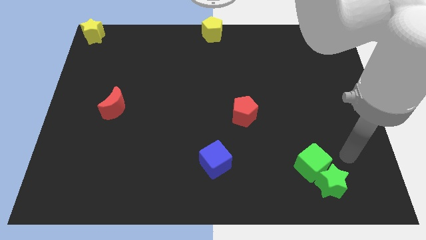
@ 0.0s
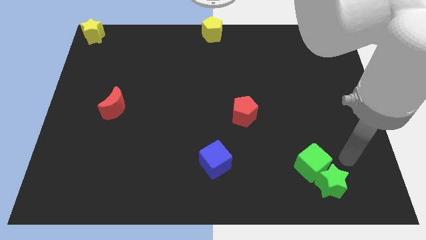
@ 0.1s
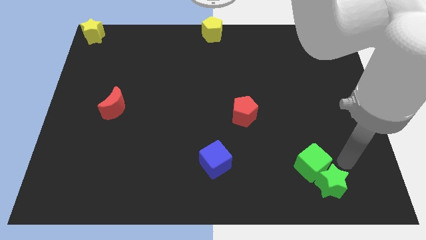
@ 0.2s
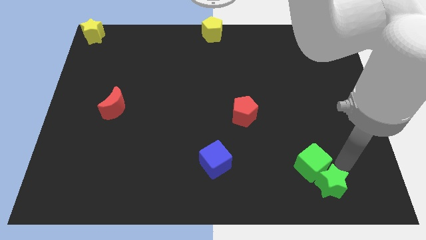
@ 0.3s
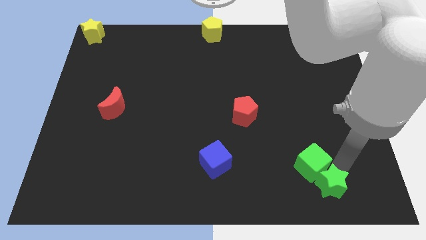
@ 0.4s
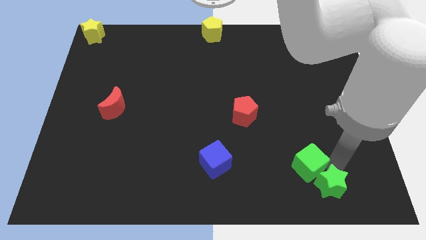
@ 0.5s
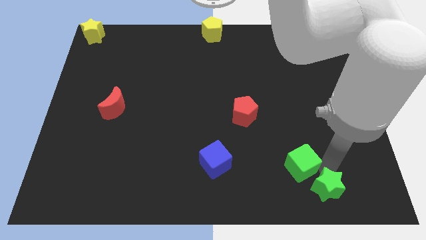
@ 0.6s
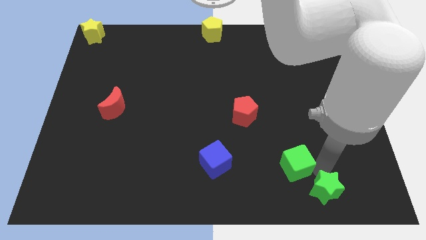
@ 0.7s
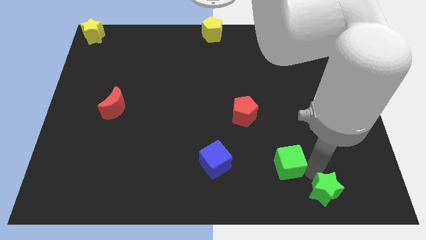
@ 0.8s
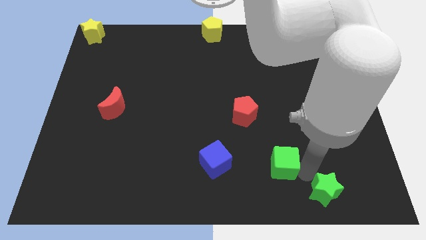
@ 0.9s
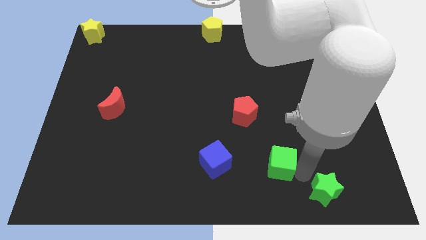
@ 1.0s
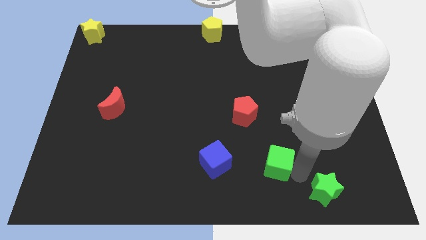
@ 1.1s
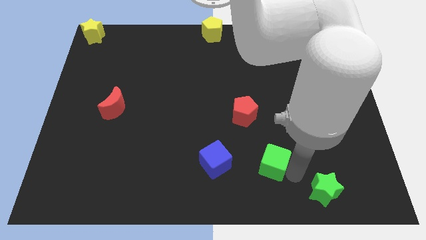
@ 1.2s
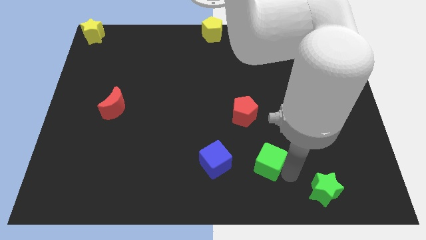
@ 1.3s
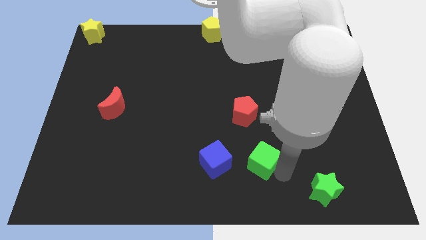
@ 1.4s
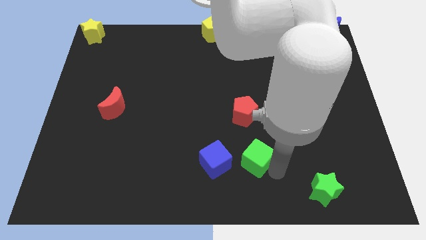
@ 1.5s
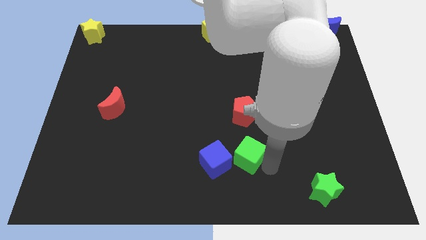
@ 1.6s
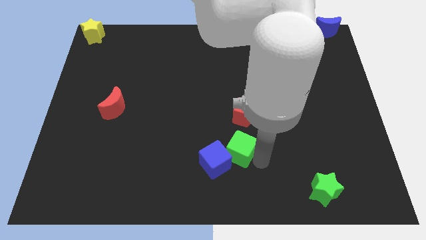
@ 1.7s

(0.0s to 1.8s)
move the green cube into the blue cube

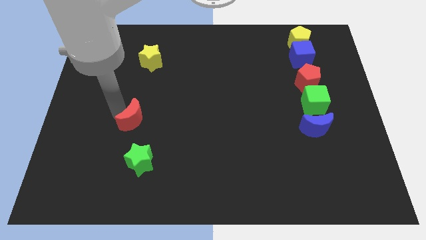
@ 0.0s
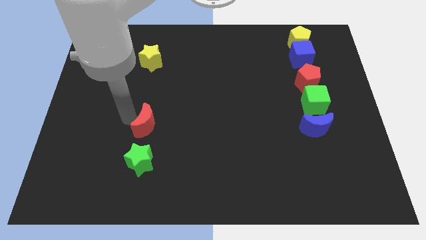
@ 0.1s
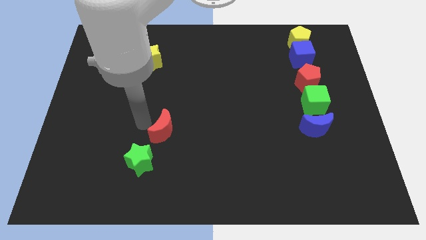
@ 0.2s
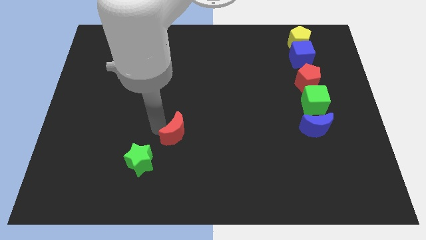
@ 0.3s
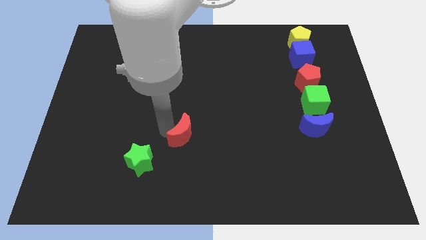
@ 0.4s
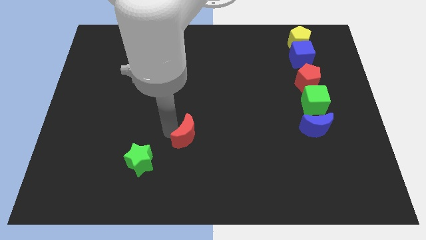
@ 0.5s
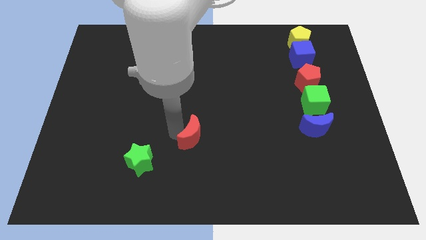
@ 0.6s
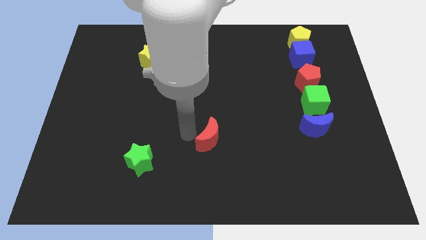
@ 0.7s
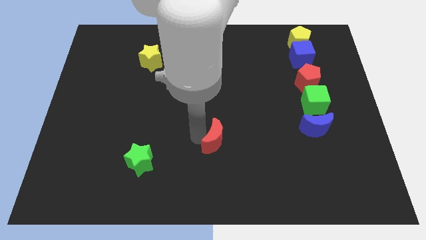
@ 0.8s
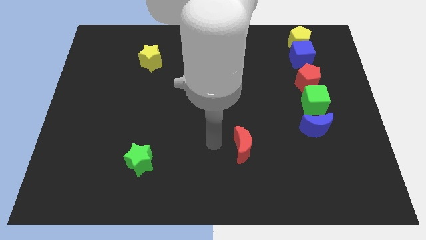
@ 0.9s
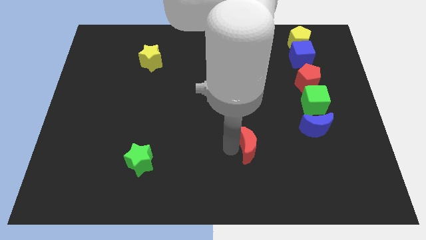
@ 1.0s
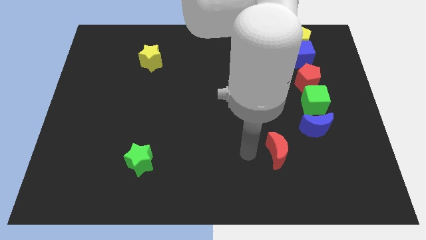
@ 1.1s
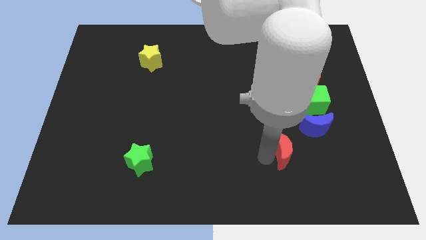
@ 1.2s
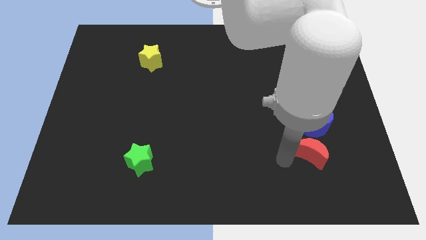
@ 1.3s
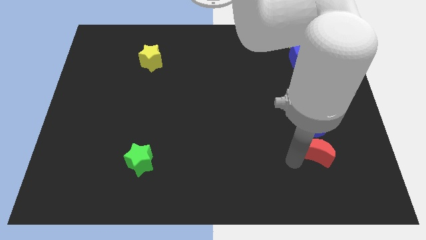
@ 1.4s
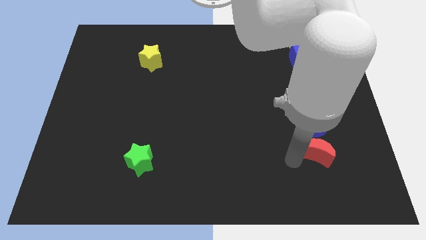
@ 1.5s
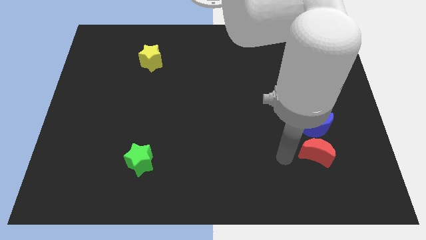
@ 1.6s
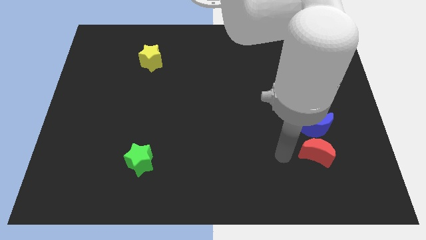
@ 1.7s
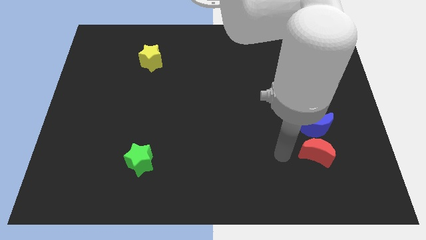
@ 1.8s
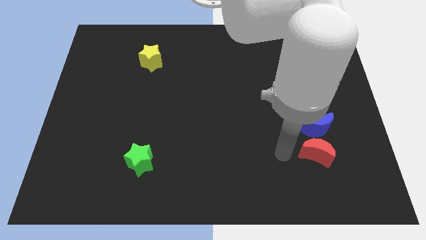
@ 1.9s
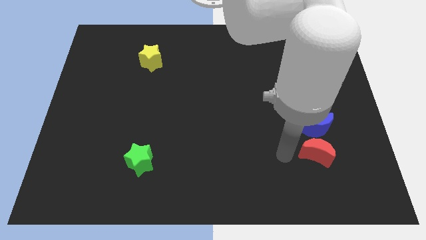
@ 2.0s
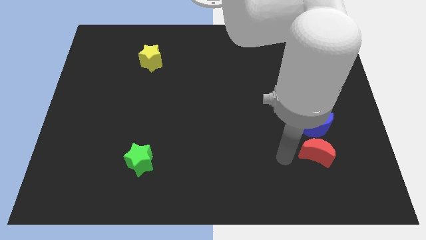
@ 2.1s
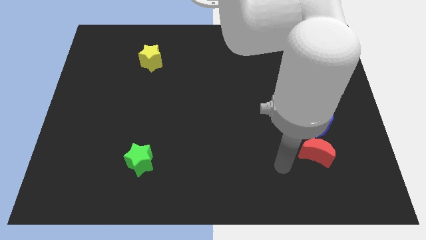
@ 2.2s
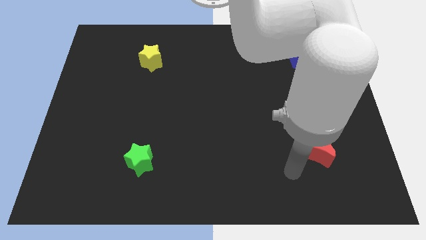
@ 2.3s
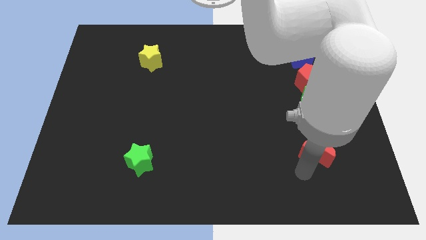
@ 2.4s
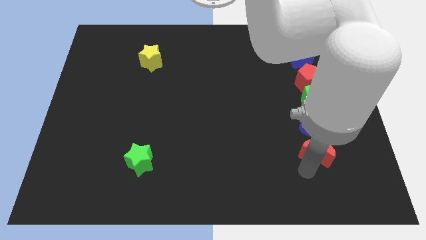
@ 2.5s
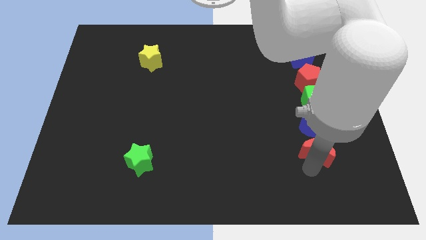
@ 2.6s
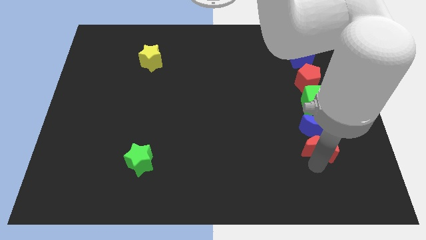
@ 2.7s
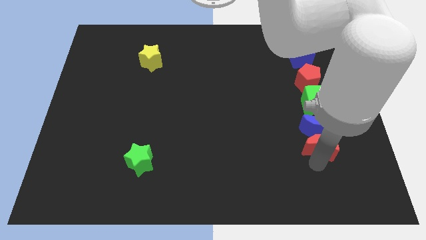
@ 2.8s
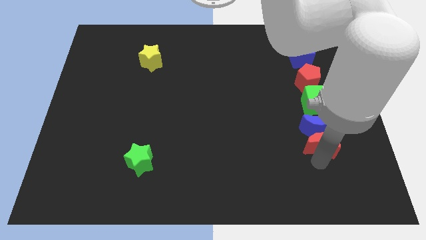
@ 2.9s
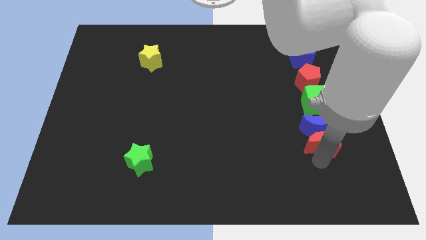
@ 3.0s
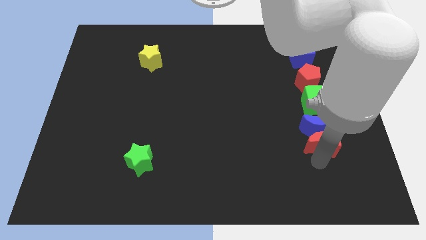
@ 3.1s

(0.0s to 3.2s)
place red moon below blue moon

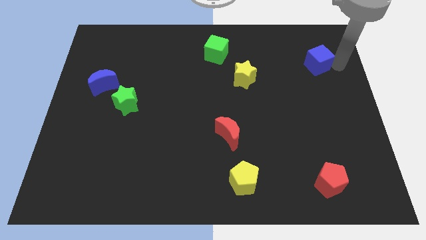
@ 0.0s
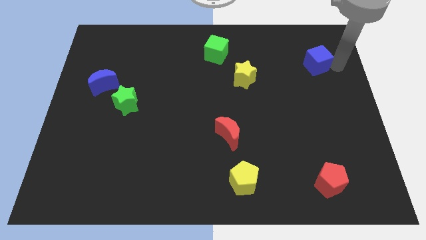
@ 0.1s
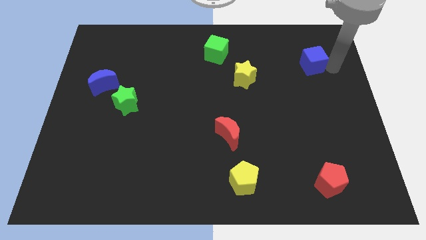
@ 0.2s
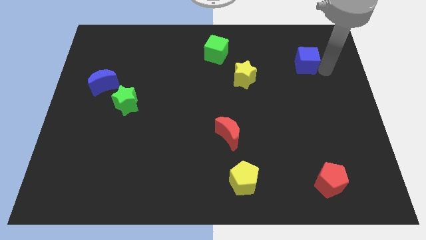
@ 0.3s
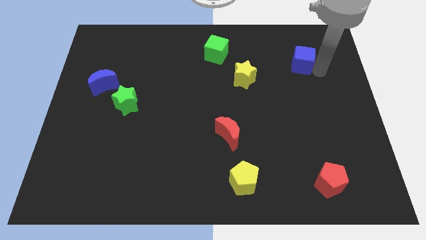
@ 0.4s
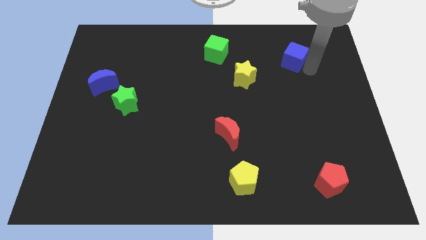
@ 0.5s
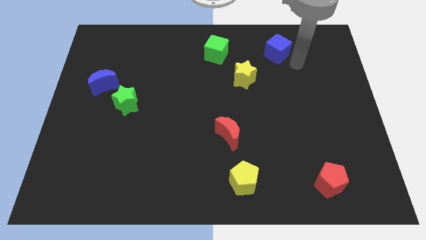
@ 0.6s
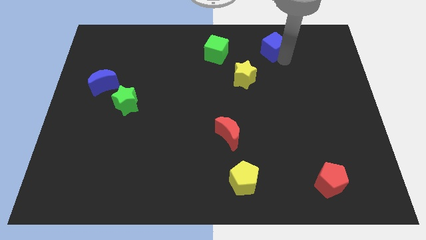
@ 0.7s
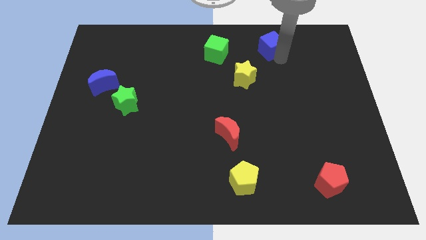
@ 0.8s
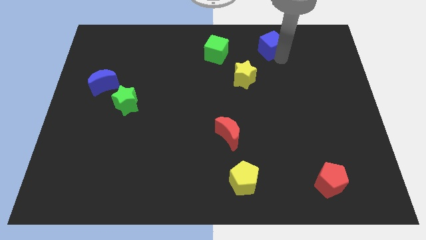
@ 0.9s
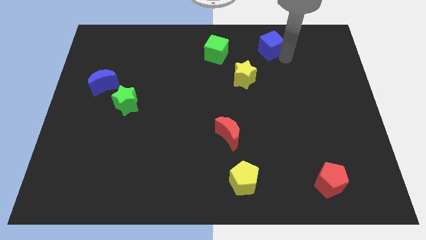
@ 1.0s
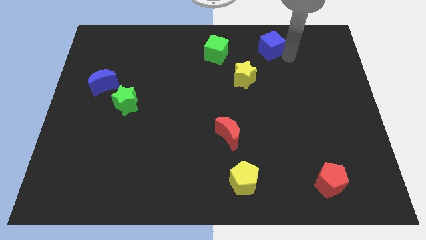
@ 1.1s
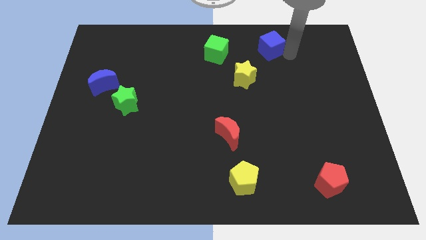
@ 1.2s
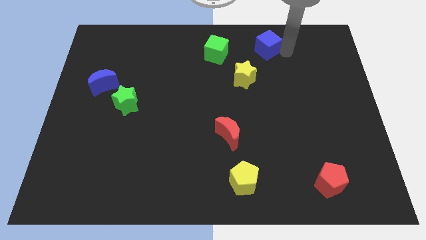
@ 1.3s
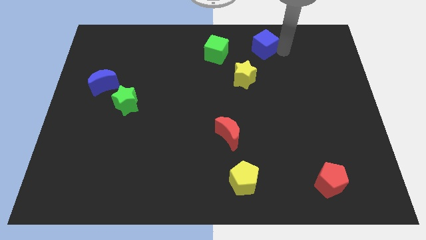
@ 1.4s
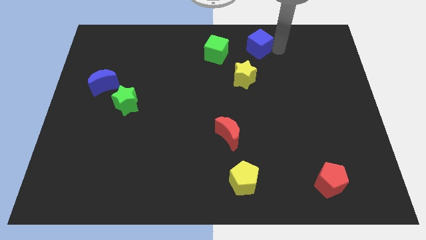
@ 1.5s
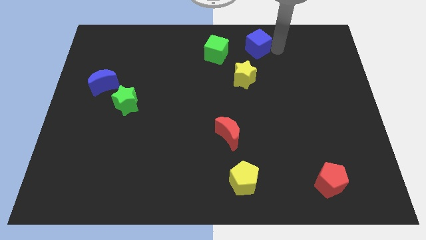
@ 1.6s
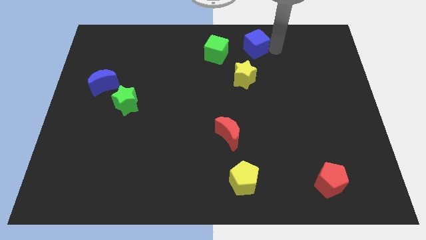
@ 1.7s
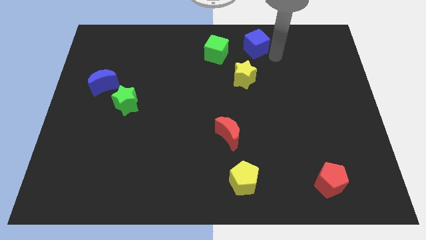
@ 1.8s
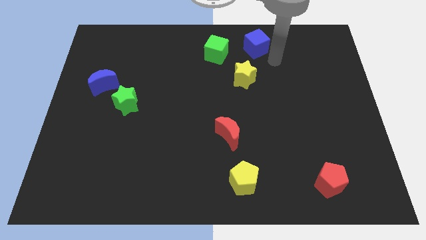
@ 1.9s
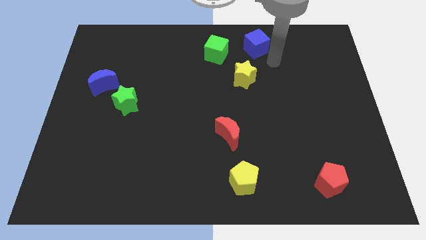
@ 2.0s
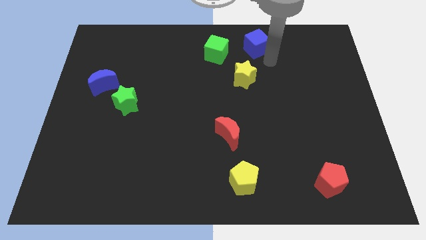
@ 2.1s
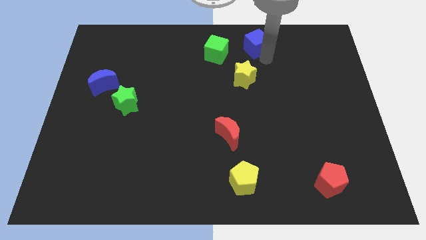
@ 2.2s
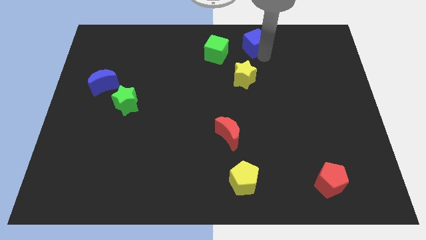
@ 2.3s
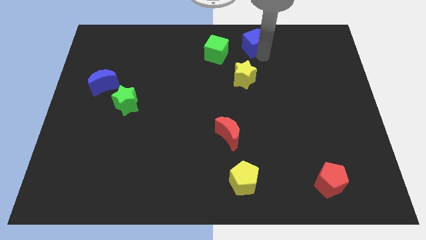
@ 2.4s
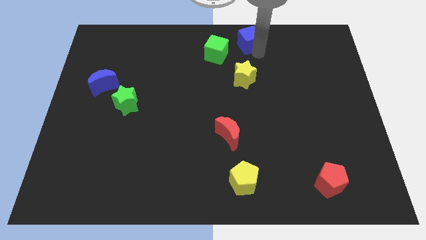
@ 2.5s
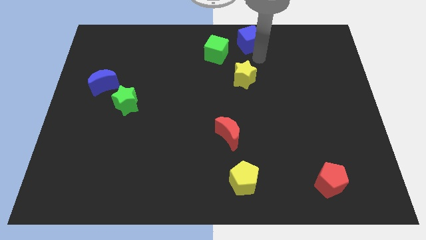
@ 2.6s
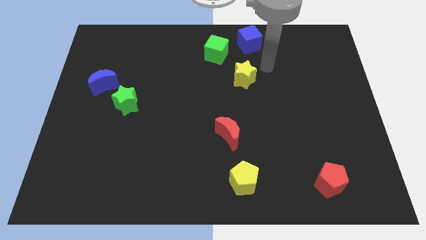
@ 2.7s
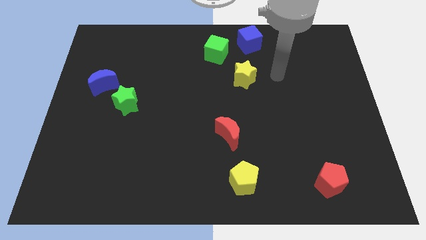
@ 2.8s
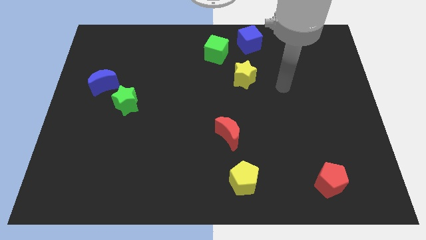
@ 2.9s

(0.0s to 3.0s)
push the blue cube to the top side of the yellow star

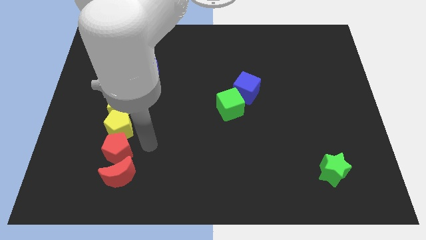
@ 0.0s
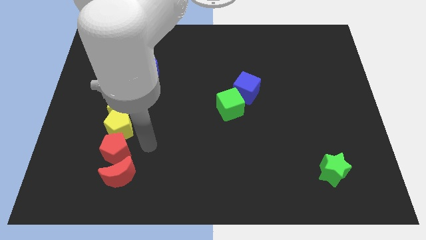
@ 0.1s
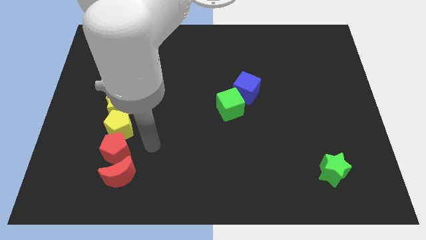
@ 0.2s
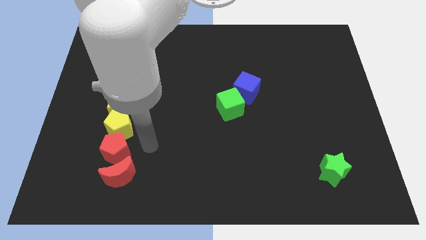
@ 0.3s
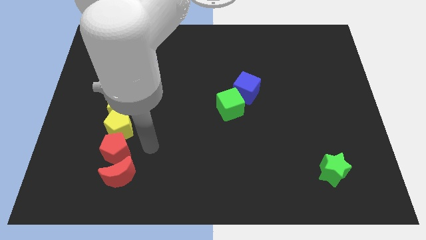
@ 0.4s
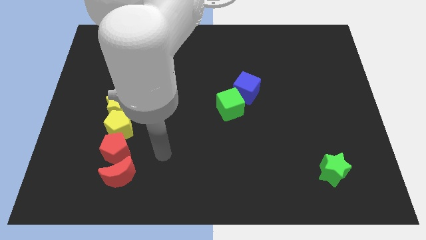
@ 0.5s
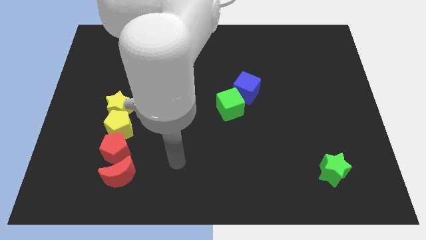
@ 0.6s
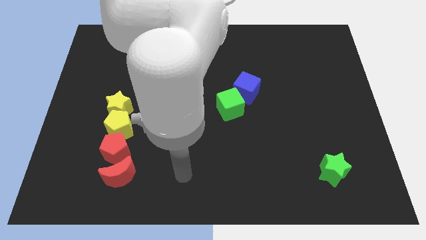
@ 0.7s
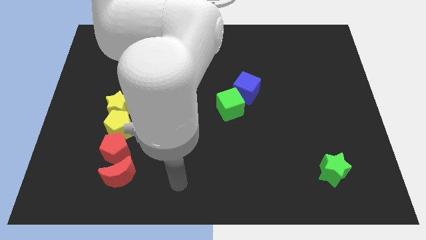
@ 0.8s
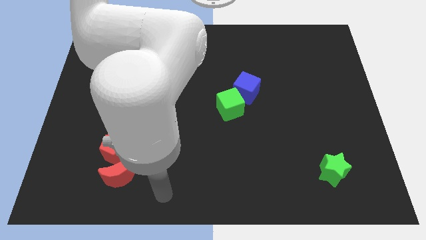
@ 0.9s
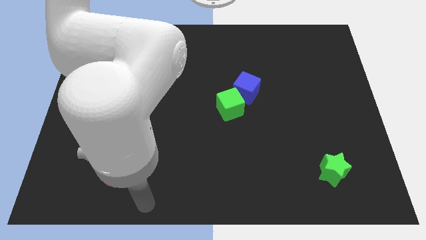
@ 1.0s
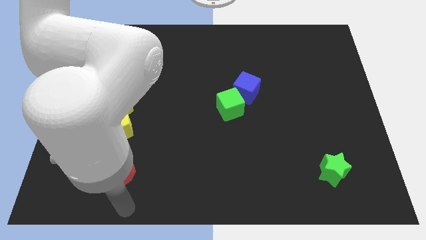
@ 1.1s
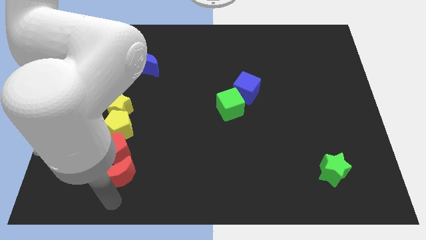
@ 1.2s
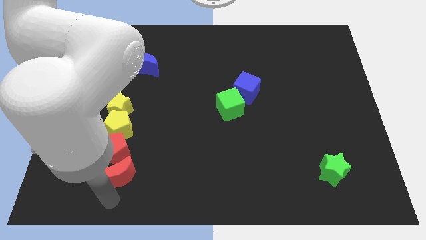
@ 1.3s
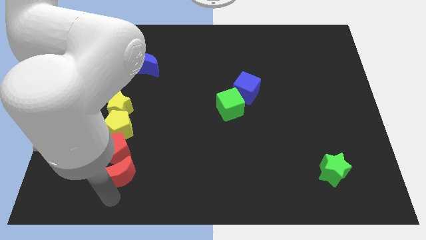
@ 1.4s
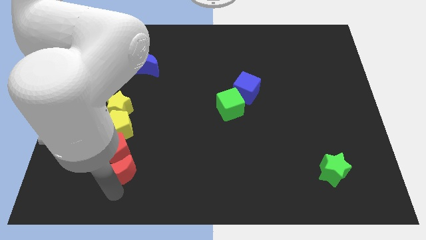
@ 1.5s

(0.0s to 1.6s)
put your arm vertically below the red moon
